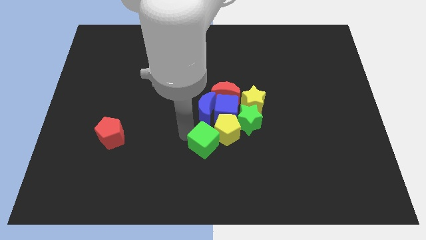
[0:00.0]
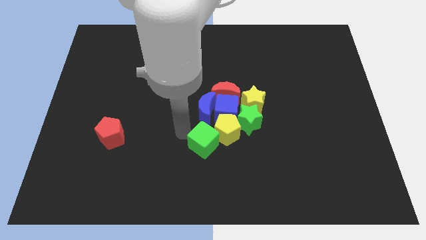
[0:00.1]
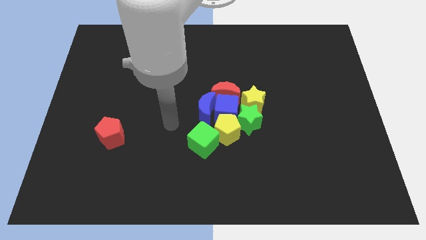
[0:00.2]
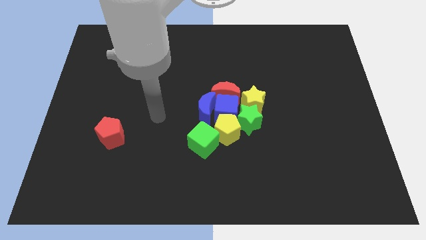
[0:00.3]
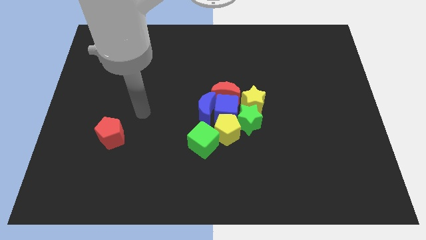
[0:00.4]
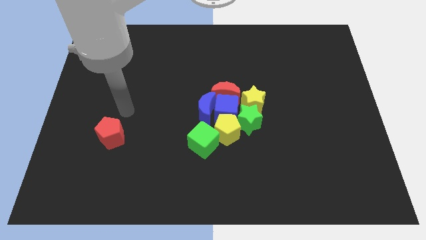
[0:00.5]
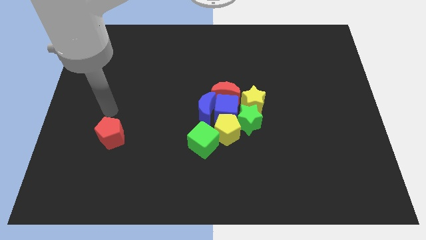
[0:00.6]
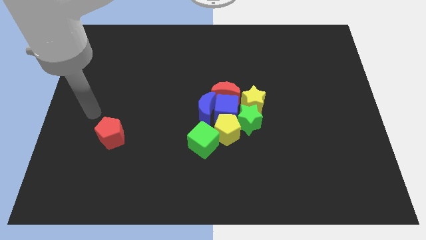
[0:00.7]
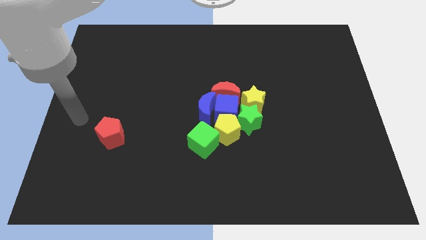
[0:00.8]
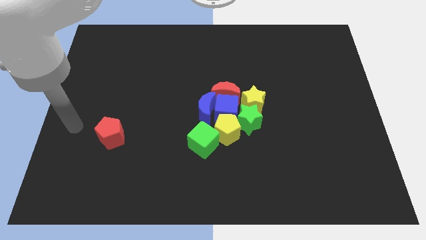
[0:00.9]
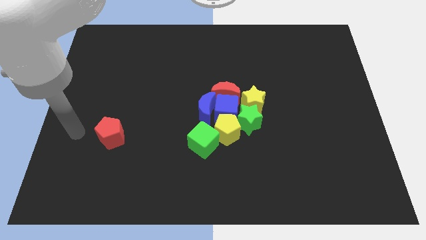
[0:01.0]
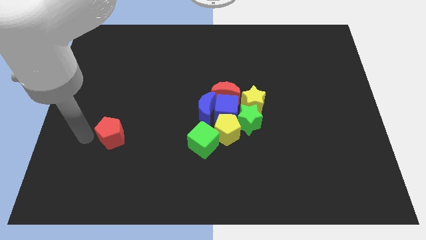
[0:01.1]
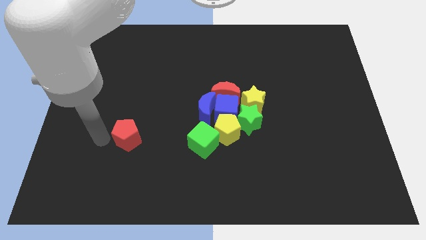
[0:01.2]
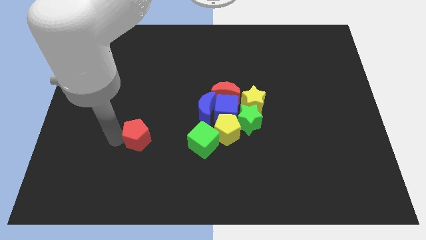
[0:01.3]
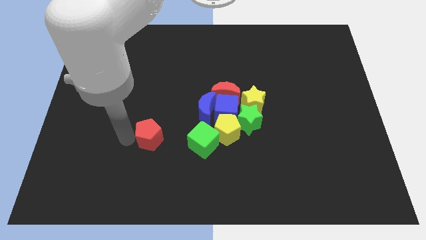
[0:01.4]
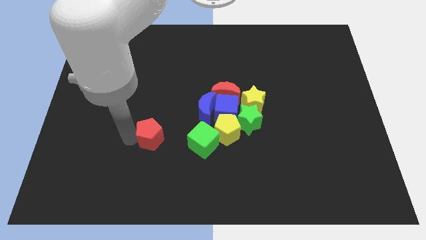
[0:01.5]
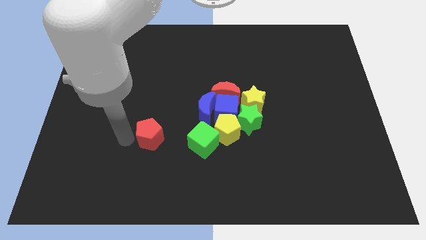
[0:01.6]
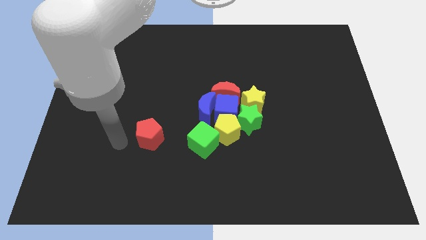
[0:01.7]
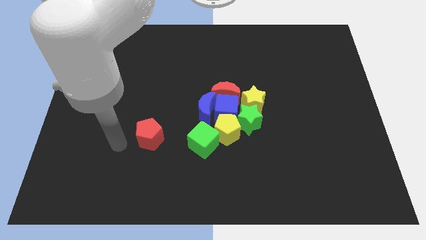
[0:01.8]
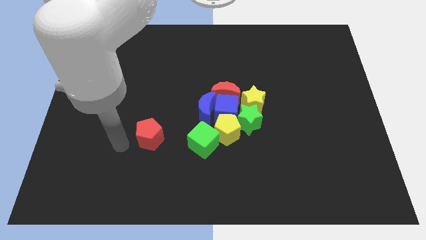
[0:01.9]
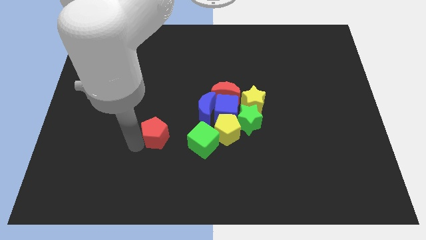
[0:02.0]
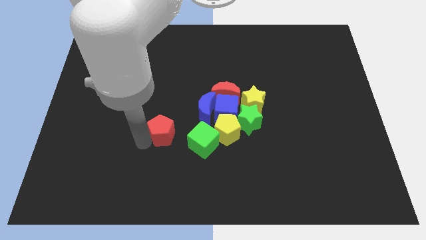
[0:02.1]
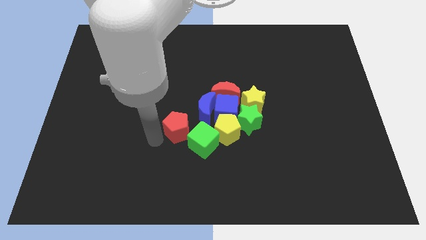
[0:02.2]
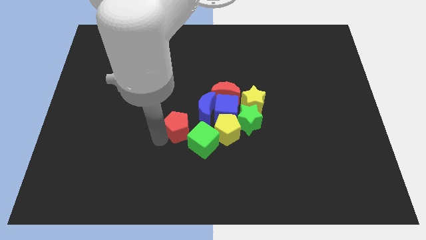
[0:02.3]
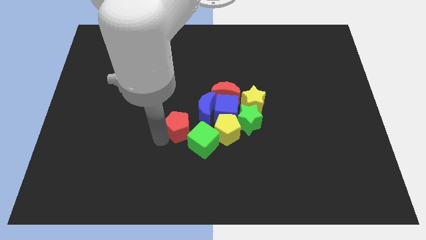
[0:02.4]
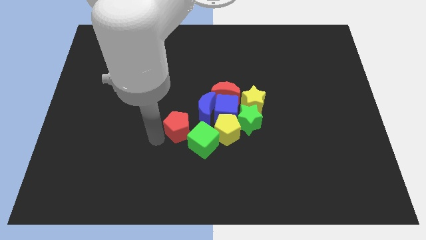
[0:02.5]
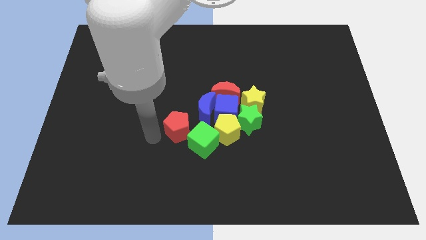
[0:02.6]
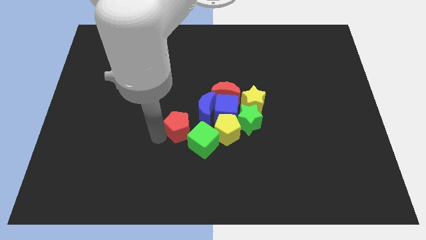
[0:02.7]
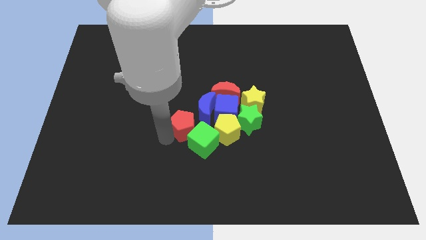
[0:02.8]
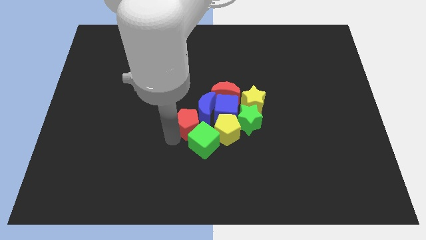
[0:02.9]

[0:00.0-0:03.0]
push the red pentagon into the green cube

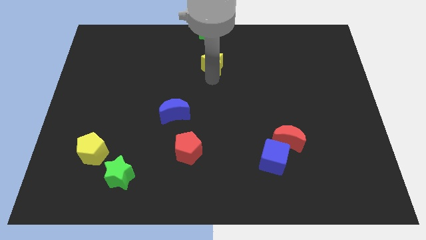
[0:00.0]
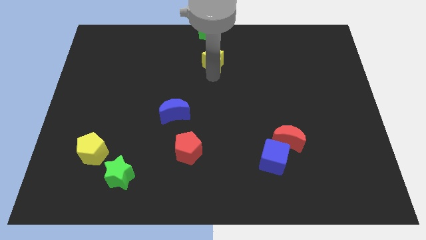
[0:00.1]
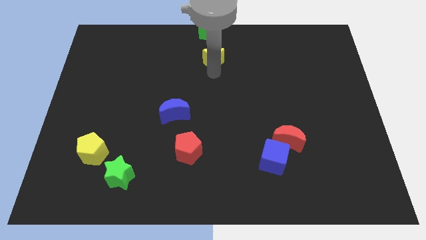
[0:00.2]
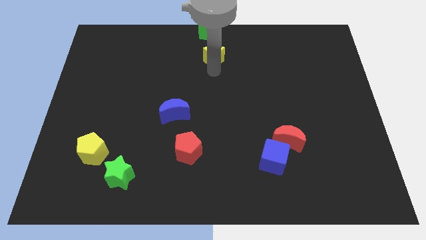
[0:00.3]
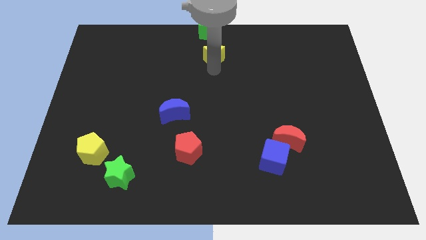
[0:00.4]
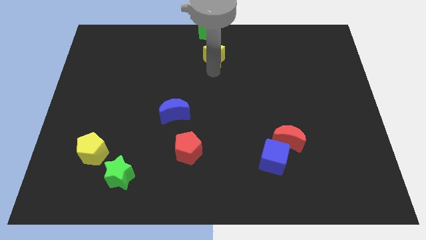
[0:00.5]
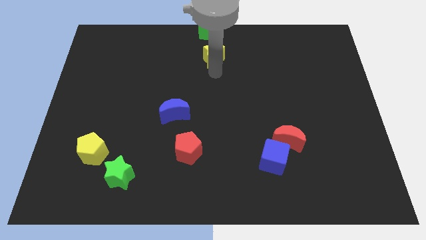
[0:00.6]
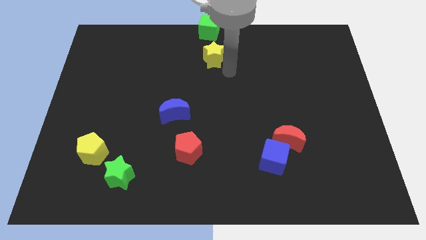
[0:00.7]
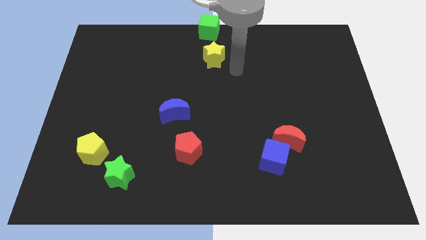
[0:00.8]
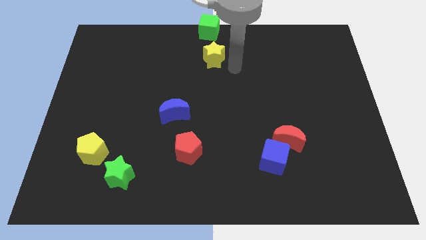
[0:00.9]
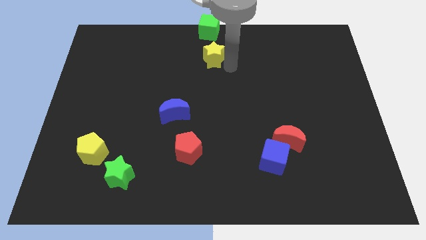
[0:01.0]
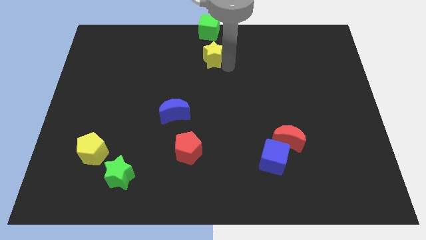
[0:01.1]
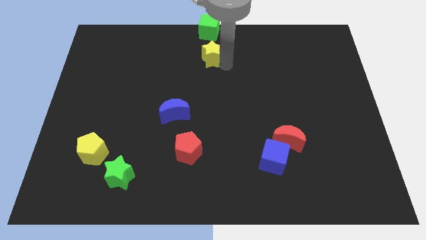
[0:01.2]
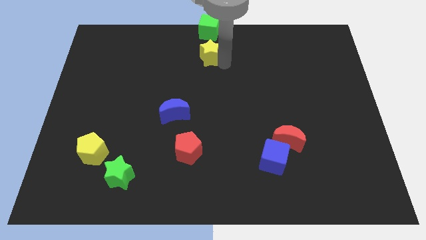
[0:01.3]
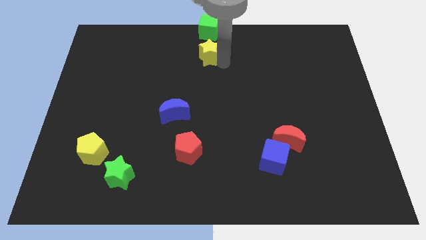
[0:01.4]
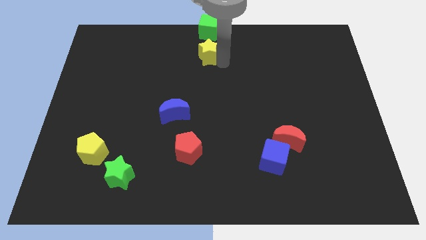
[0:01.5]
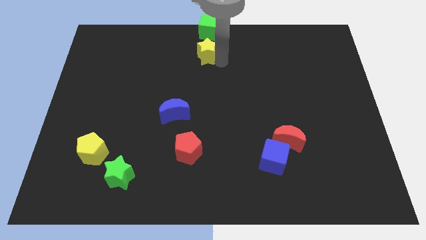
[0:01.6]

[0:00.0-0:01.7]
place the yellow star below the green cube

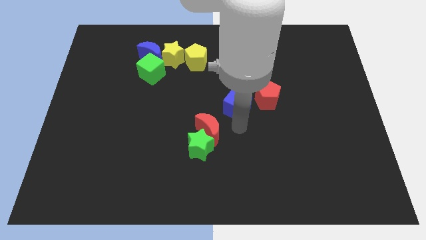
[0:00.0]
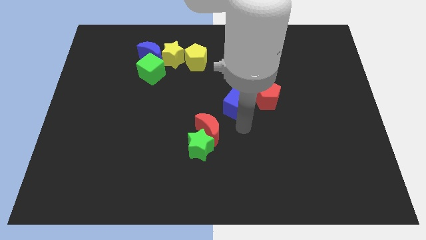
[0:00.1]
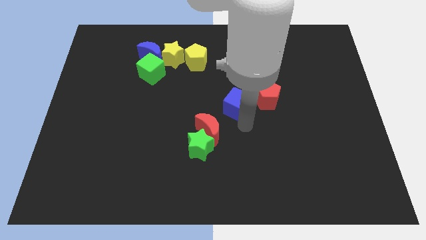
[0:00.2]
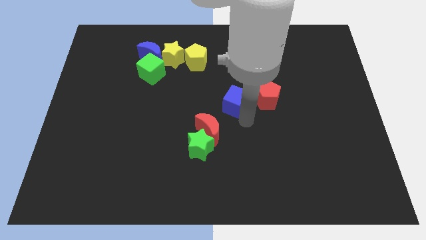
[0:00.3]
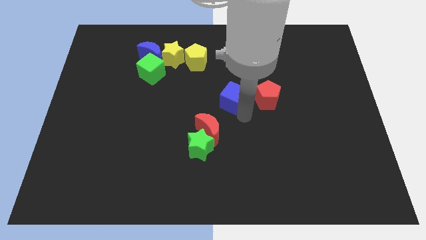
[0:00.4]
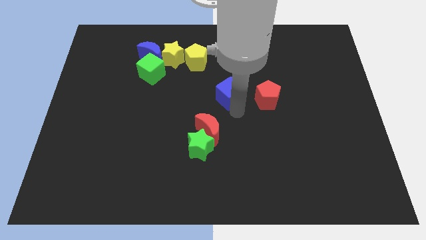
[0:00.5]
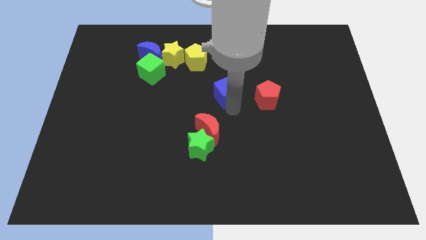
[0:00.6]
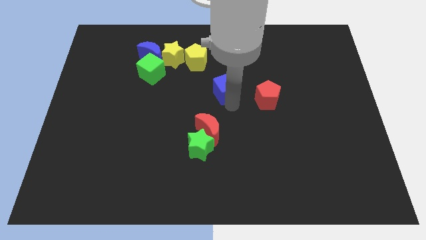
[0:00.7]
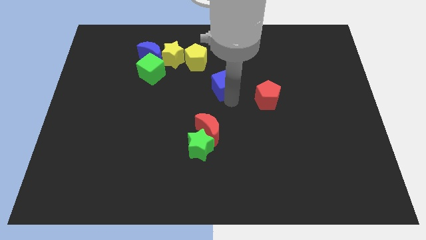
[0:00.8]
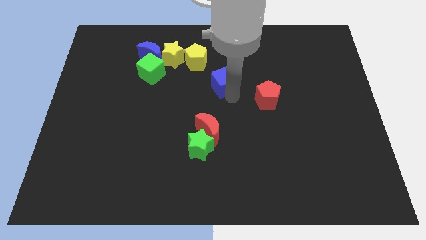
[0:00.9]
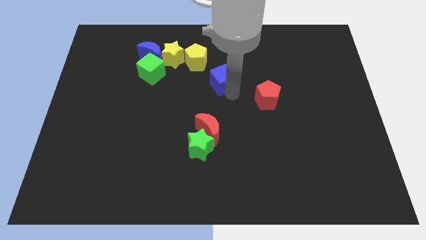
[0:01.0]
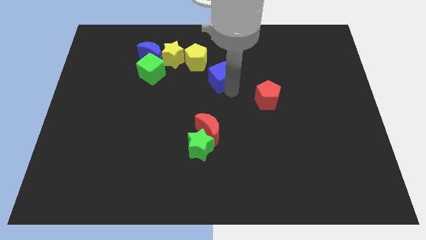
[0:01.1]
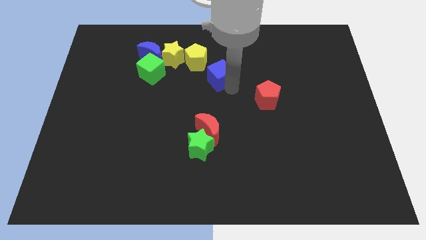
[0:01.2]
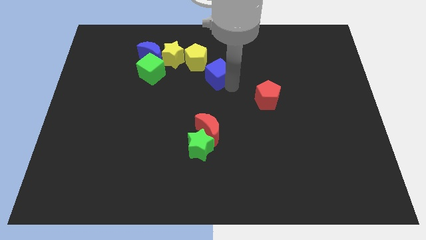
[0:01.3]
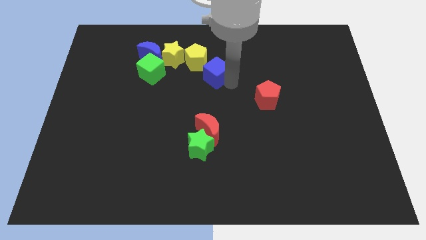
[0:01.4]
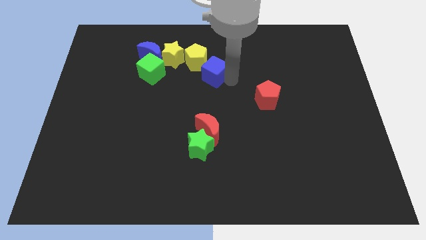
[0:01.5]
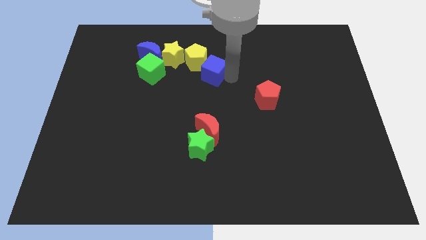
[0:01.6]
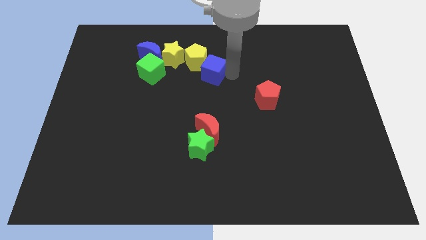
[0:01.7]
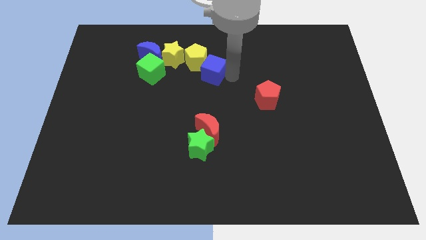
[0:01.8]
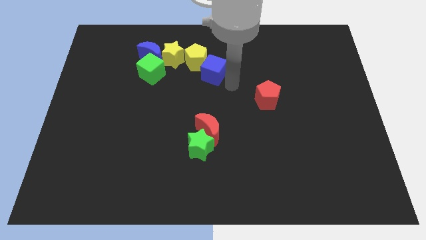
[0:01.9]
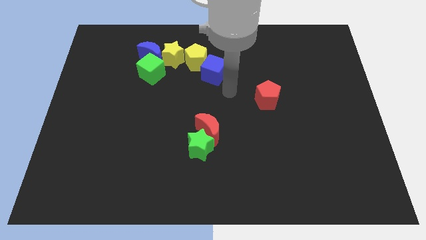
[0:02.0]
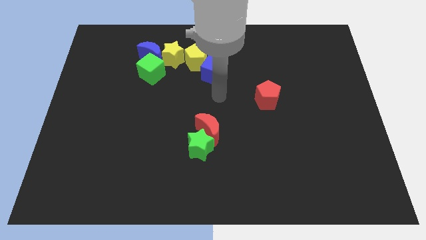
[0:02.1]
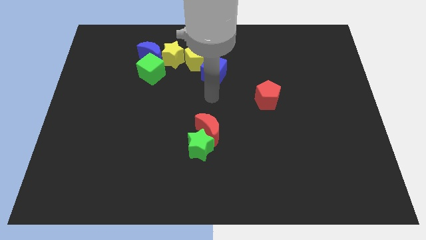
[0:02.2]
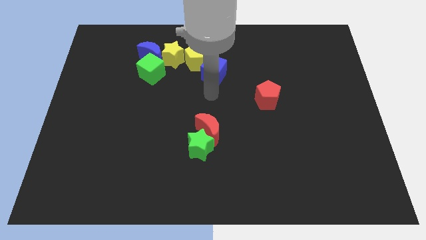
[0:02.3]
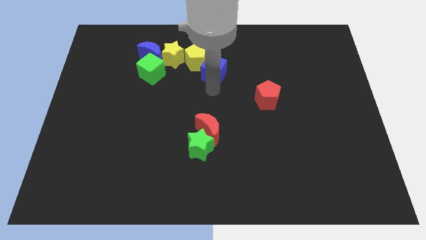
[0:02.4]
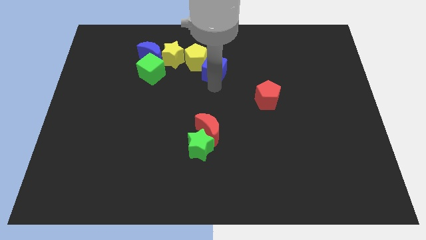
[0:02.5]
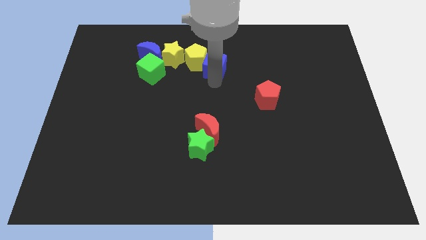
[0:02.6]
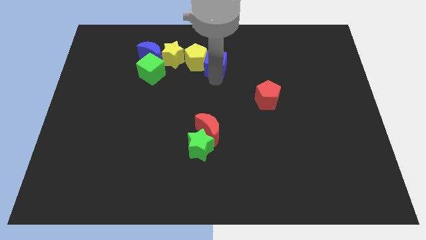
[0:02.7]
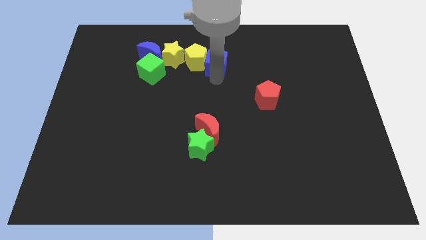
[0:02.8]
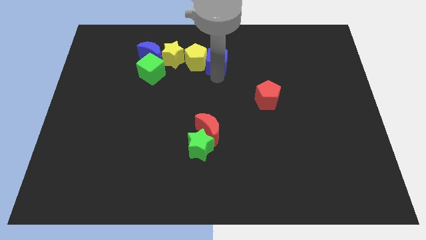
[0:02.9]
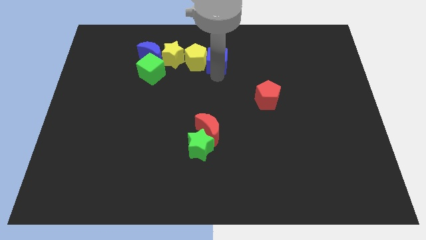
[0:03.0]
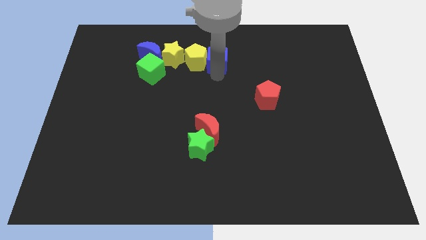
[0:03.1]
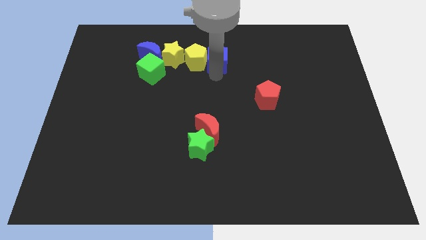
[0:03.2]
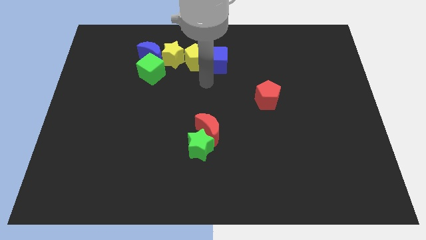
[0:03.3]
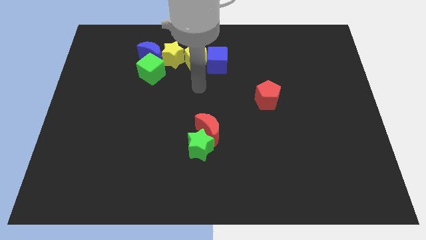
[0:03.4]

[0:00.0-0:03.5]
push the blue cube to the right side of the yellow pentagon

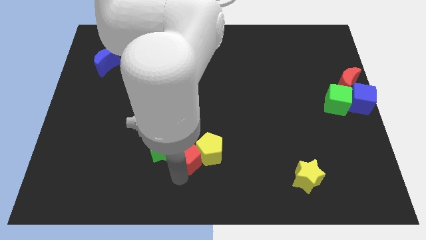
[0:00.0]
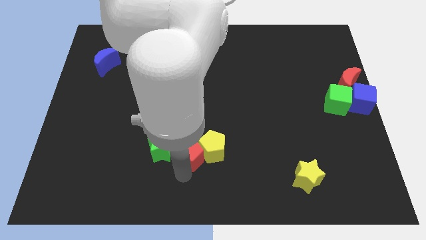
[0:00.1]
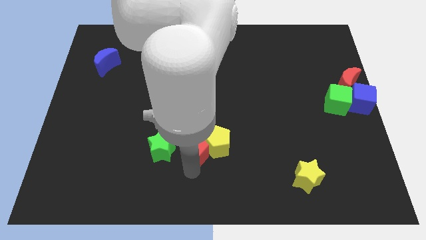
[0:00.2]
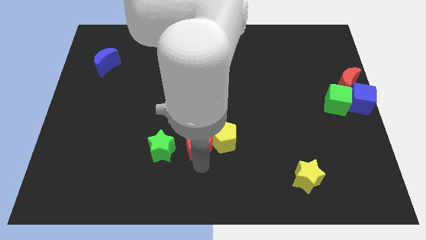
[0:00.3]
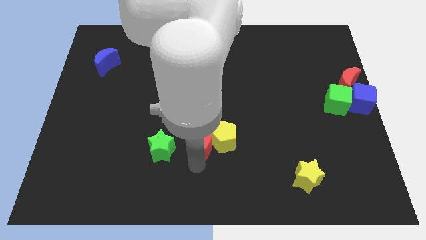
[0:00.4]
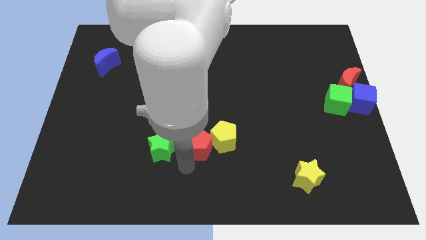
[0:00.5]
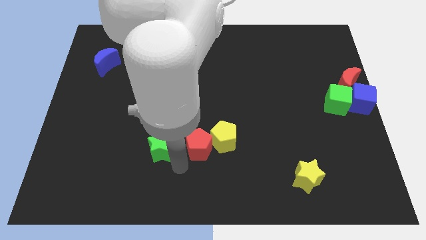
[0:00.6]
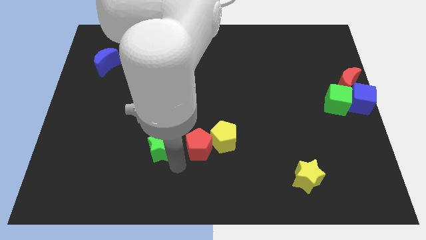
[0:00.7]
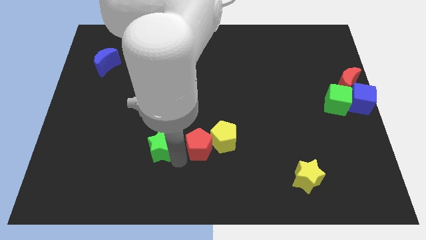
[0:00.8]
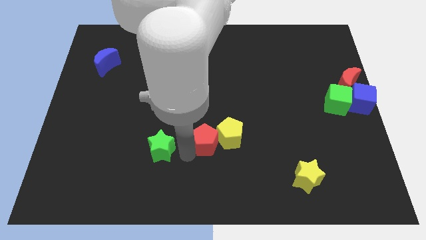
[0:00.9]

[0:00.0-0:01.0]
point your arm between red pentagon and green star
